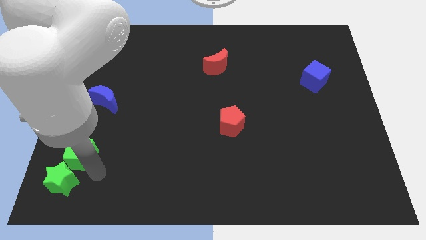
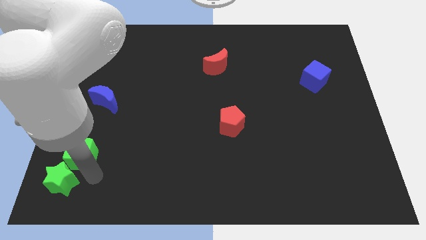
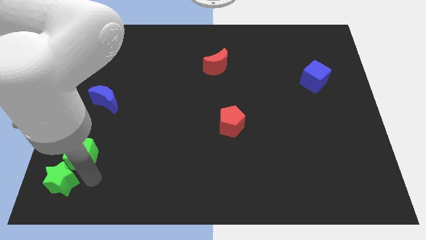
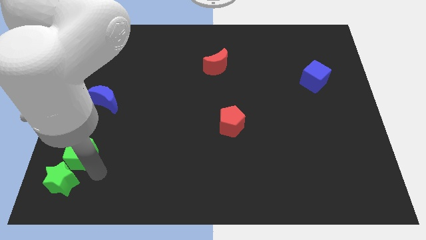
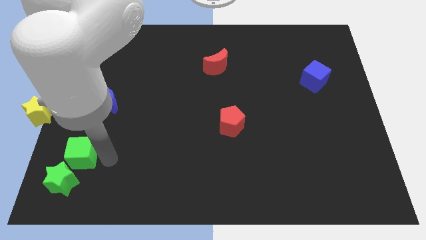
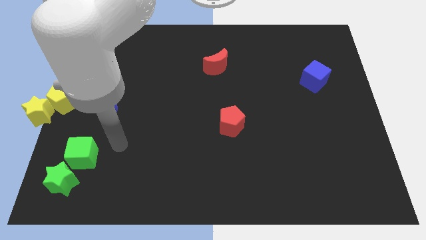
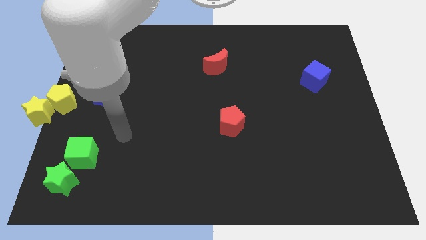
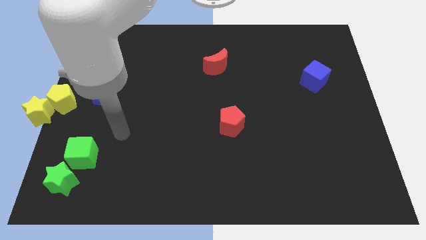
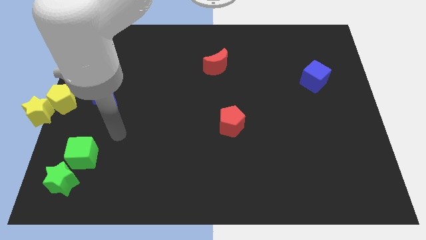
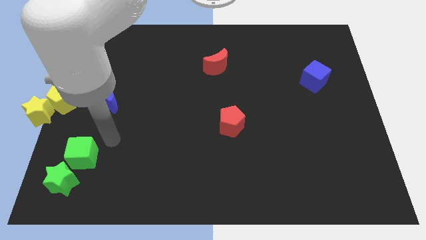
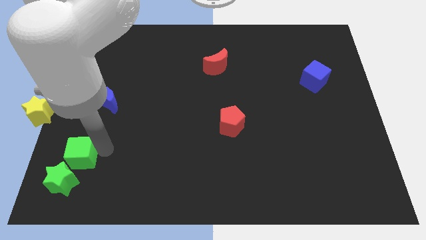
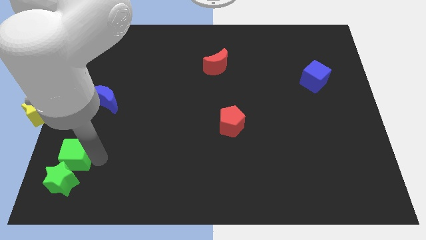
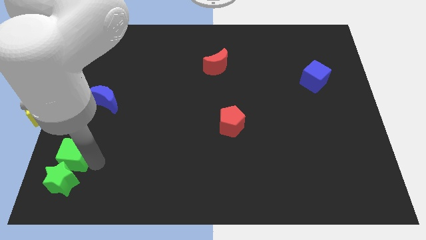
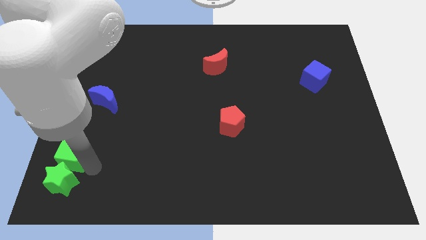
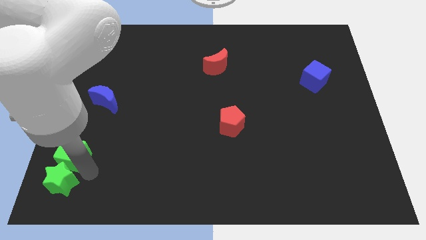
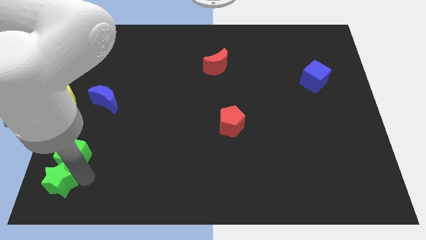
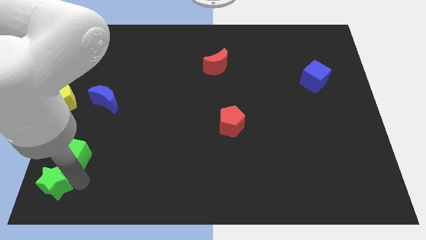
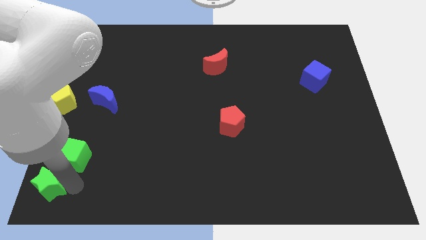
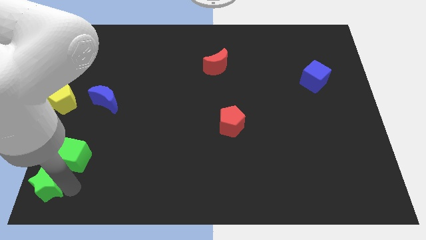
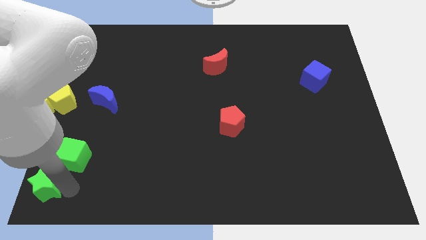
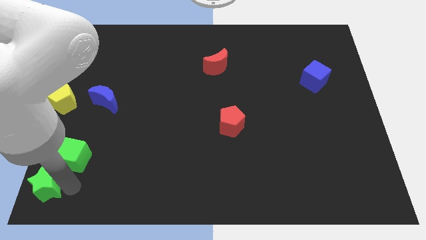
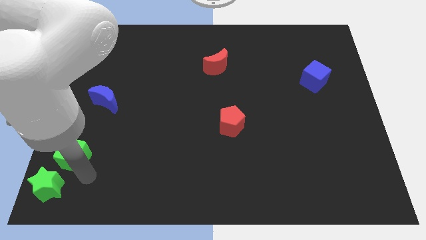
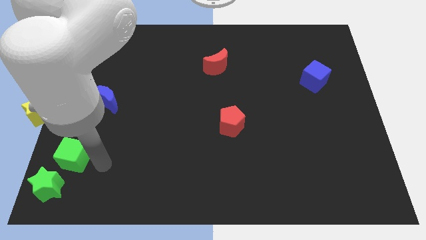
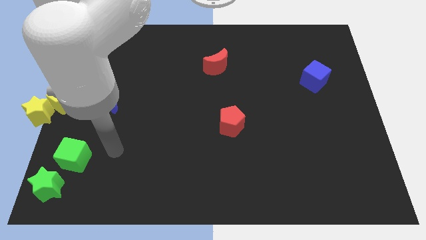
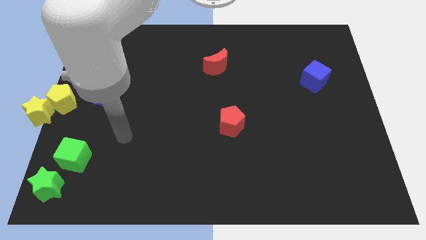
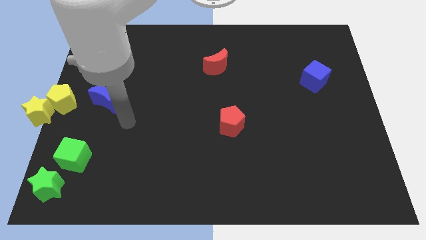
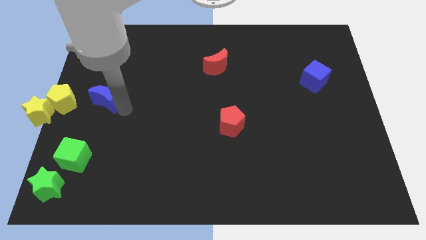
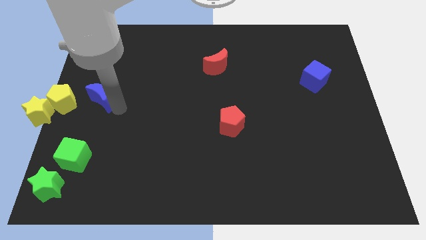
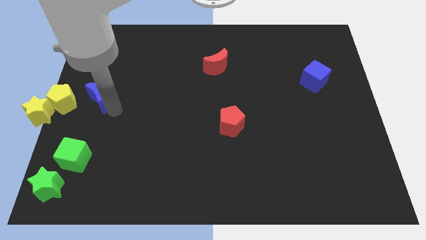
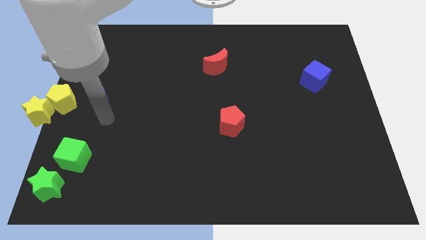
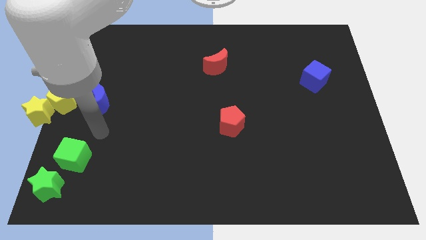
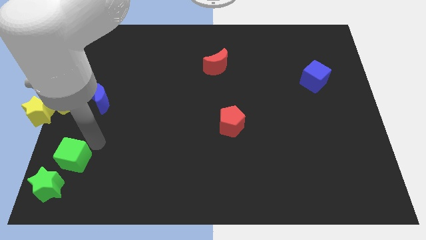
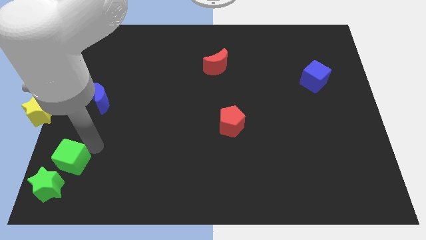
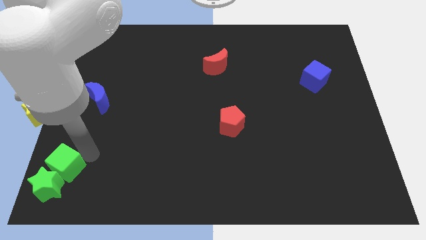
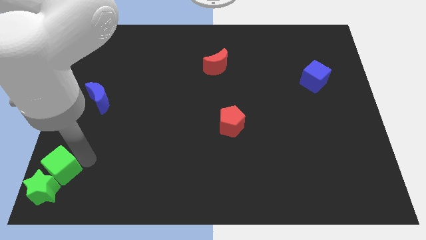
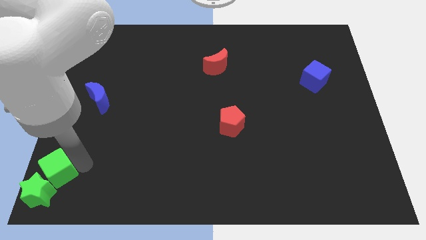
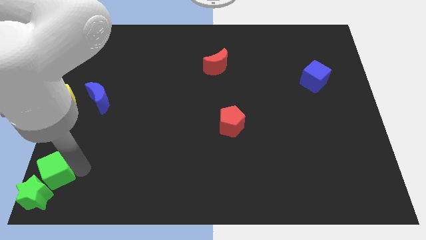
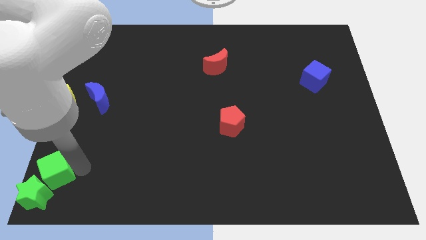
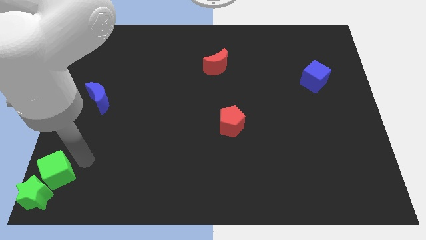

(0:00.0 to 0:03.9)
push the green blocks at bottom left corner of the board

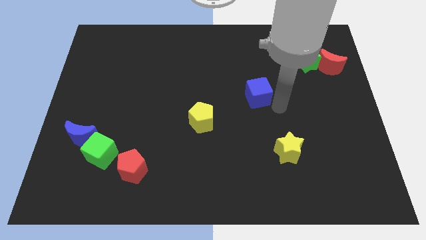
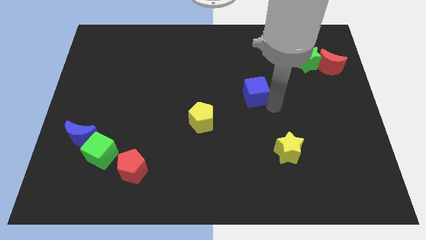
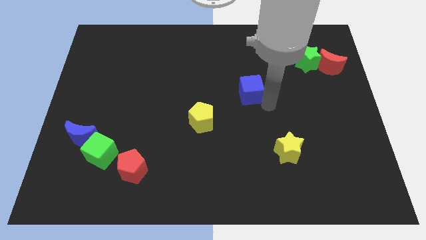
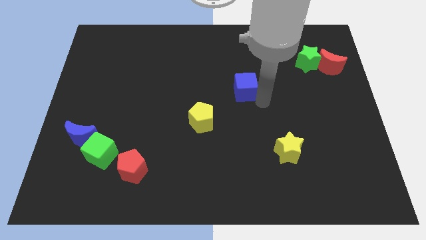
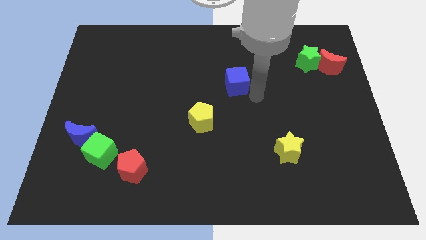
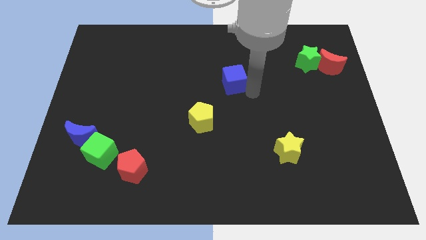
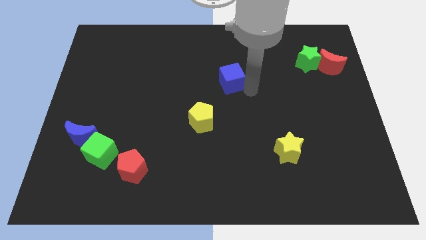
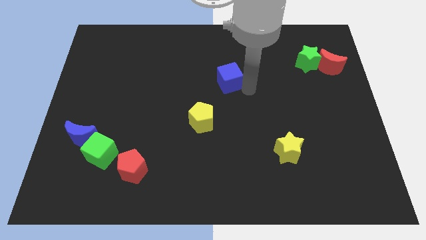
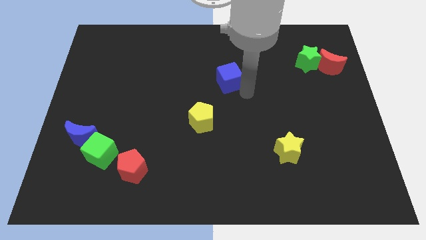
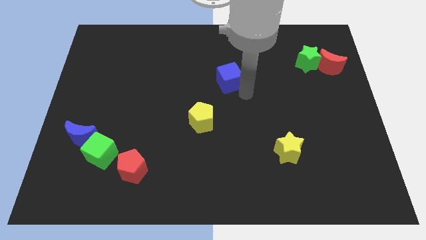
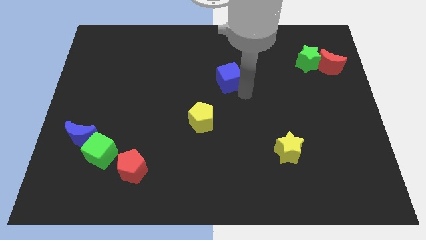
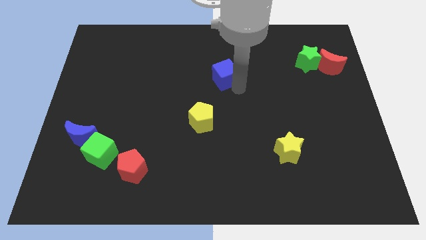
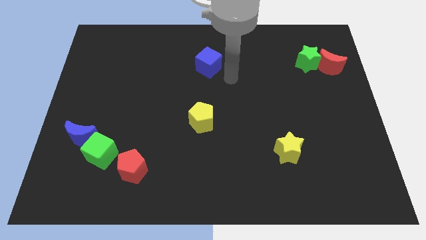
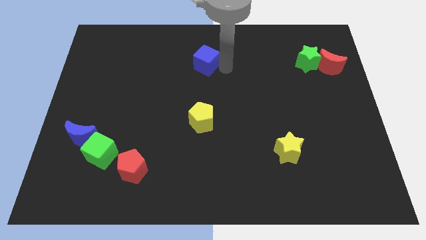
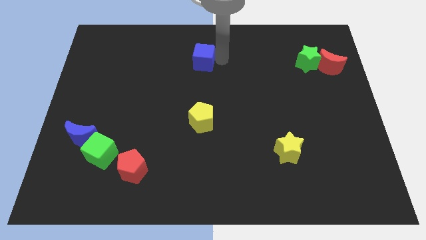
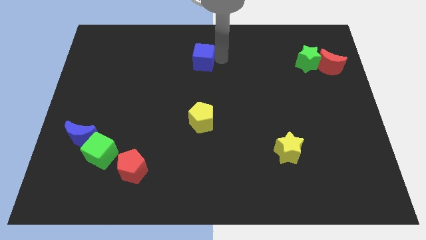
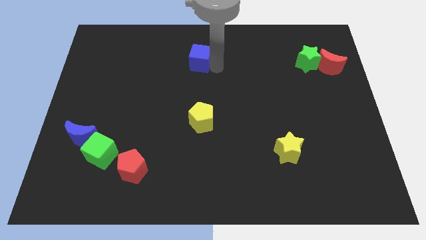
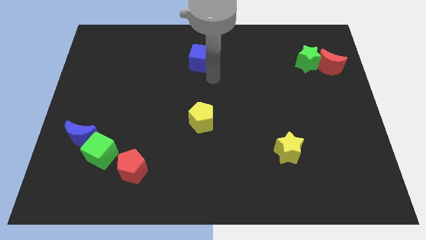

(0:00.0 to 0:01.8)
move the blue cube to the top of the yellow pentagon

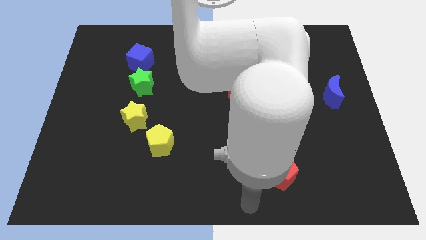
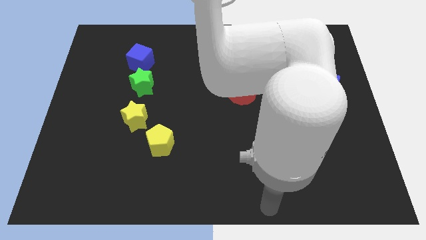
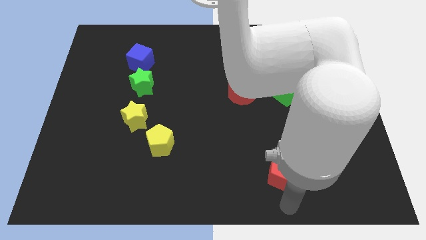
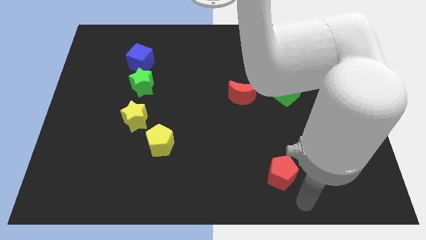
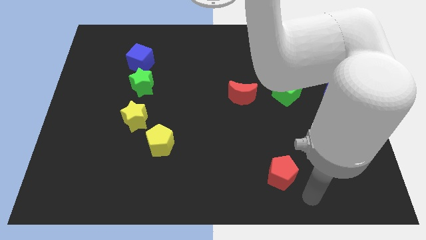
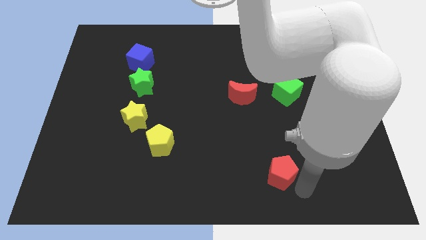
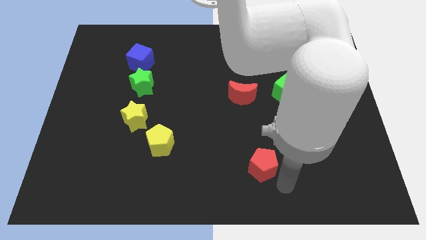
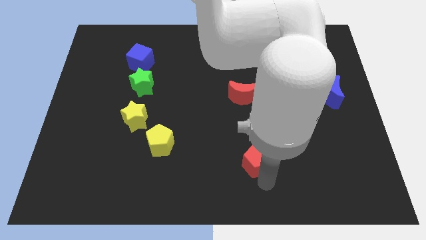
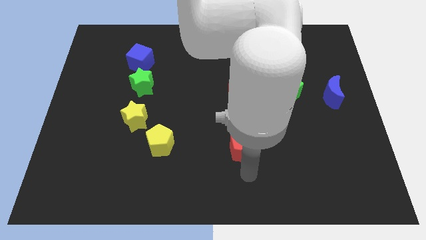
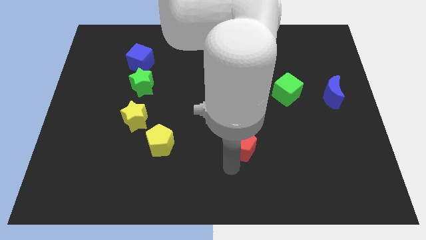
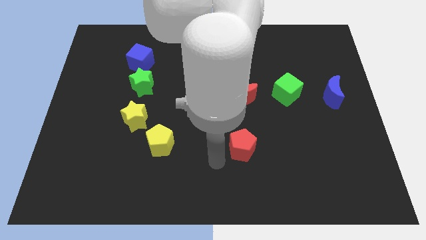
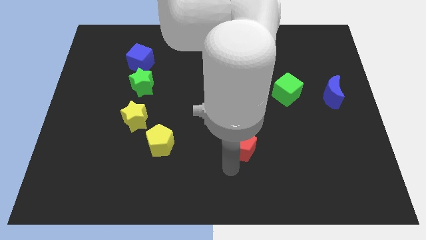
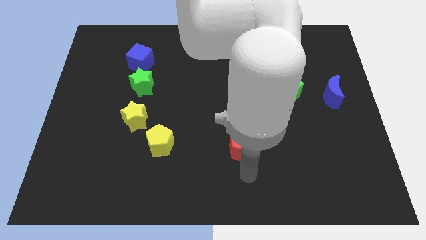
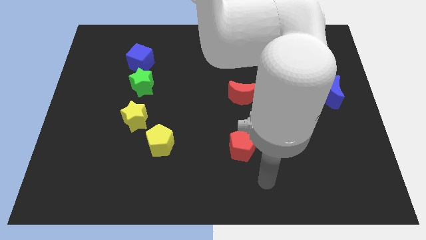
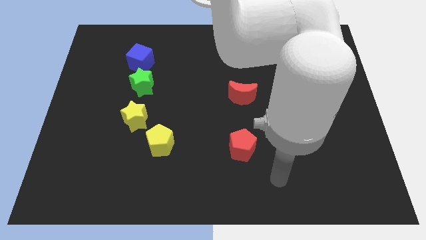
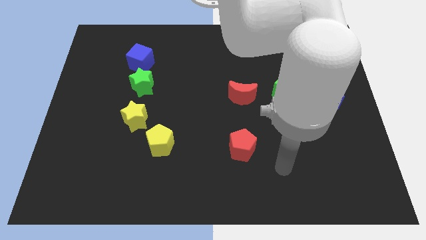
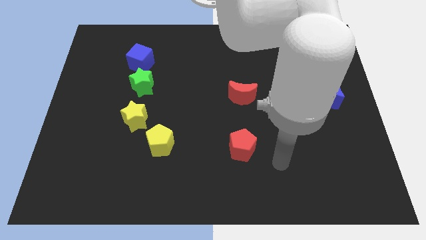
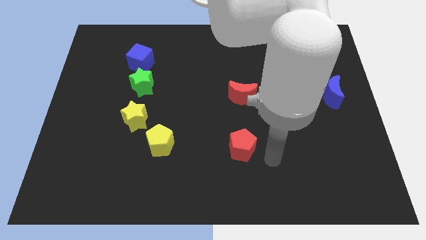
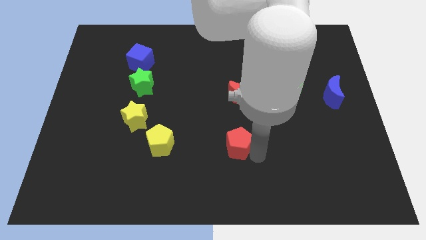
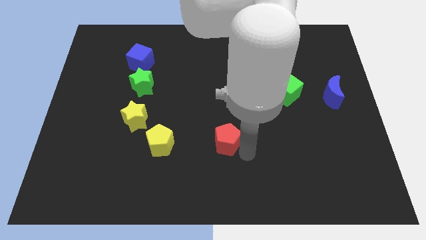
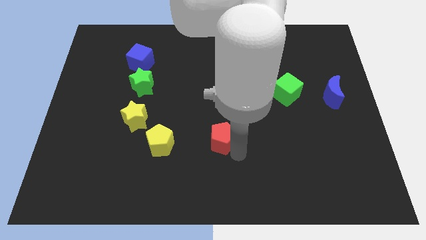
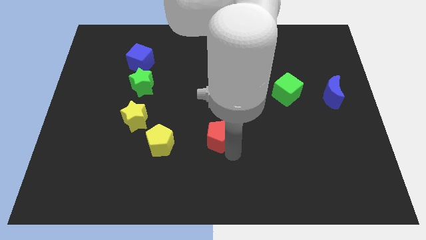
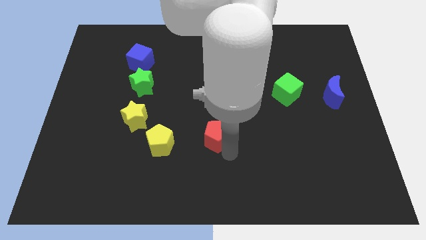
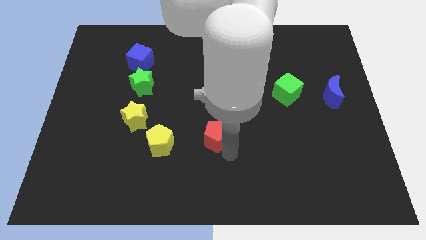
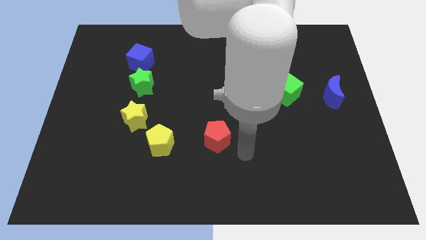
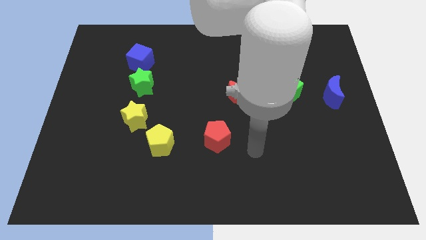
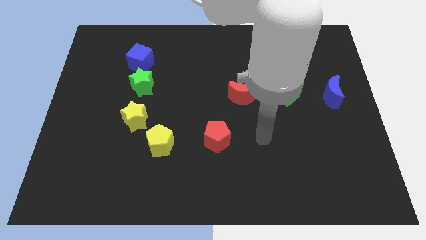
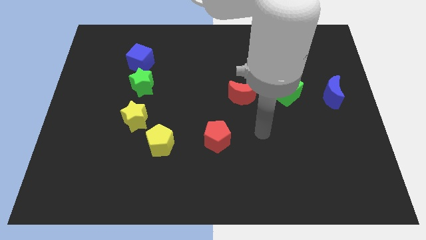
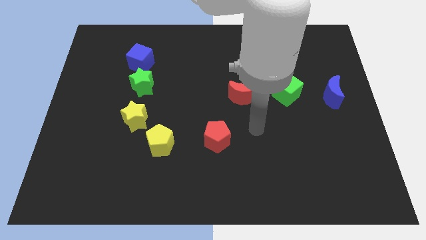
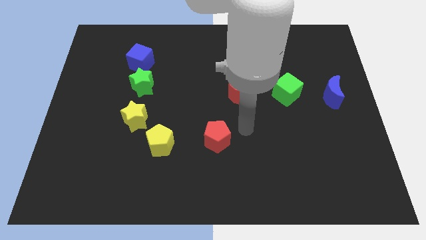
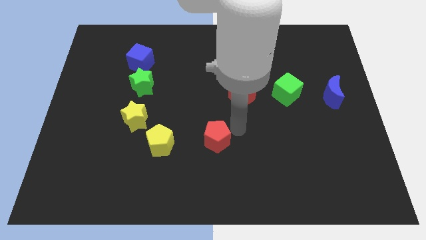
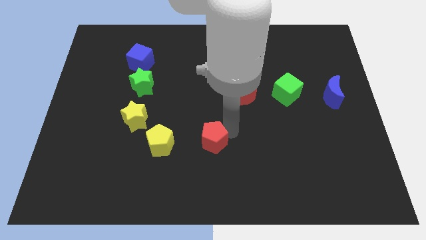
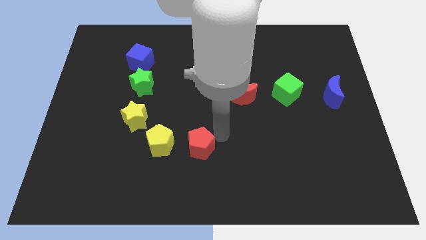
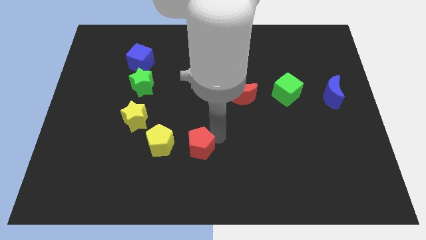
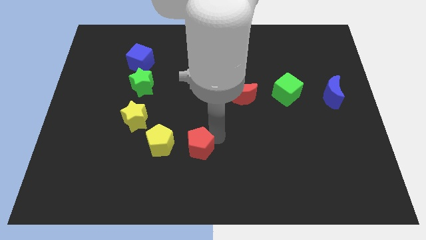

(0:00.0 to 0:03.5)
put red pentagon to the right of the yellow pentagon
